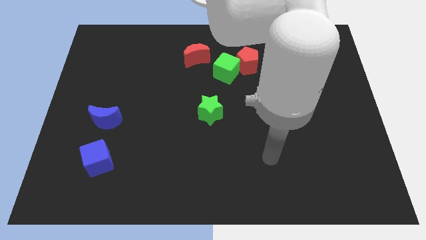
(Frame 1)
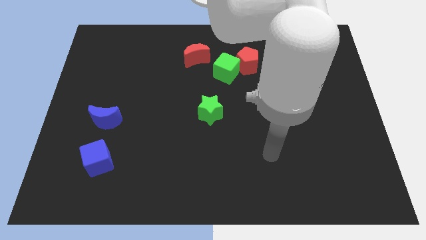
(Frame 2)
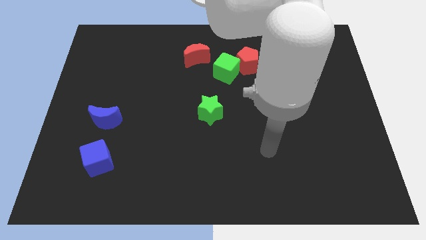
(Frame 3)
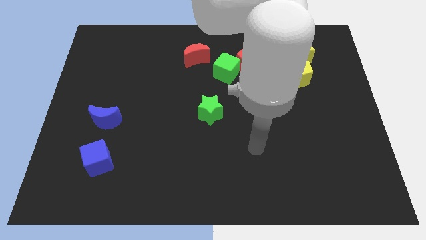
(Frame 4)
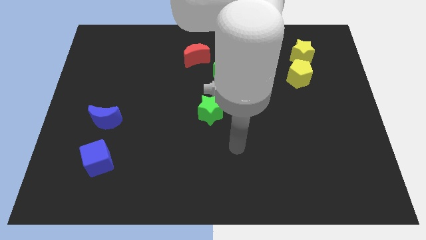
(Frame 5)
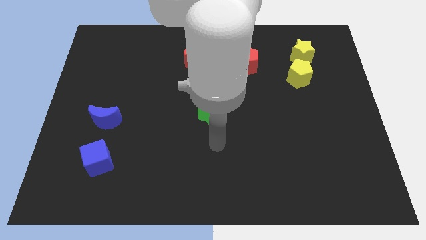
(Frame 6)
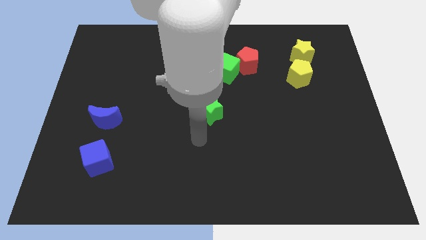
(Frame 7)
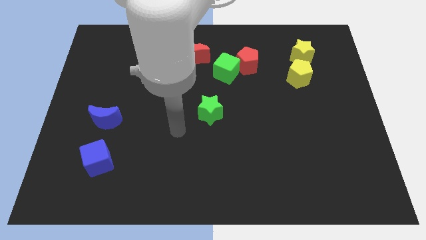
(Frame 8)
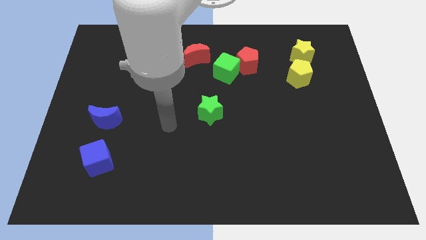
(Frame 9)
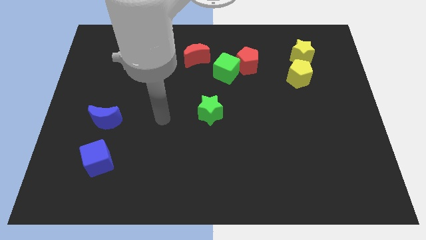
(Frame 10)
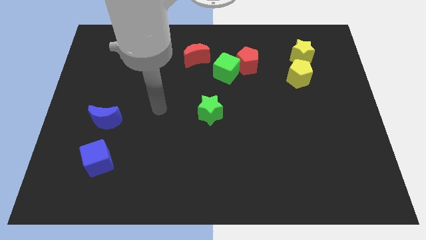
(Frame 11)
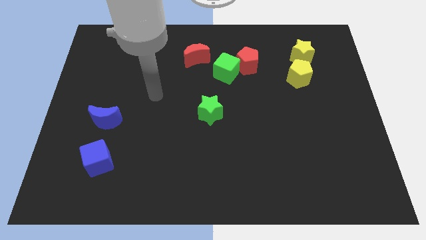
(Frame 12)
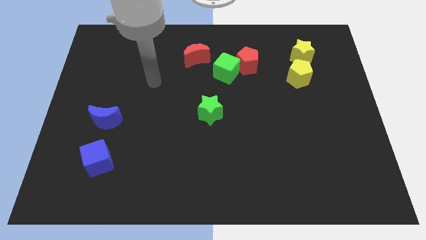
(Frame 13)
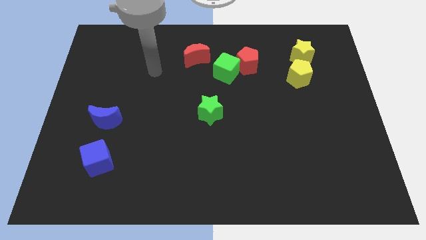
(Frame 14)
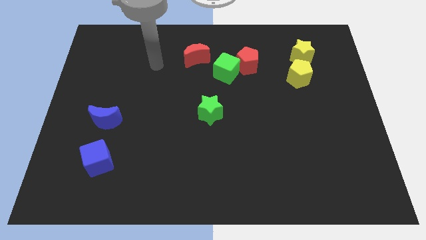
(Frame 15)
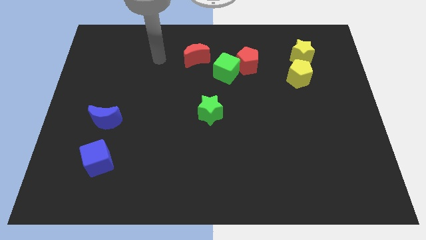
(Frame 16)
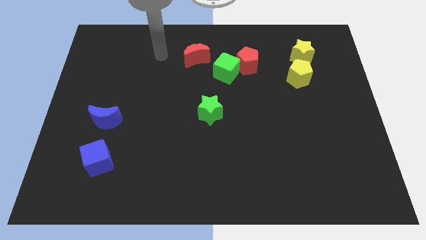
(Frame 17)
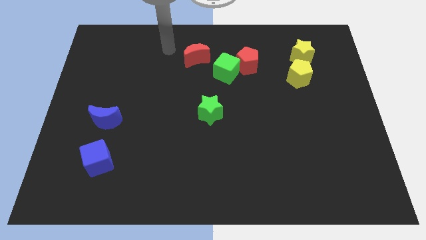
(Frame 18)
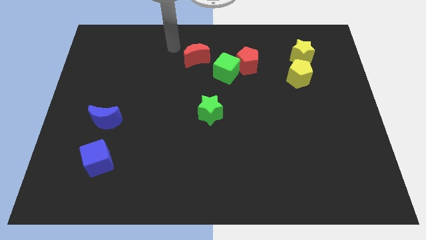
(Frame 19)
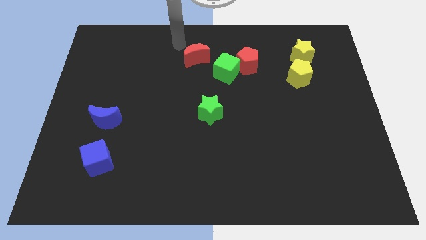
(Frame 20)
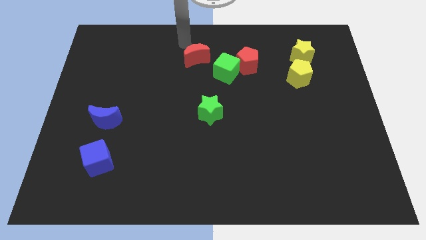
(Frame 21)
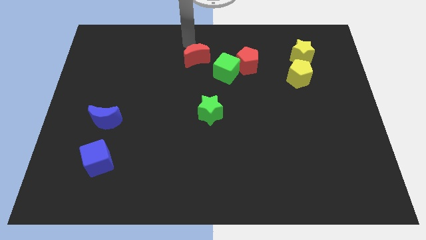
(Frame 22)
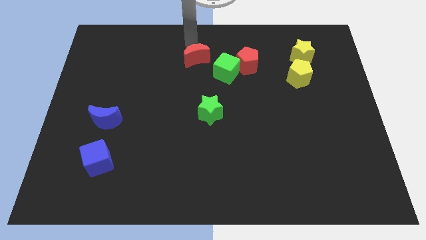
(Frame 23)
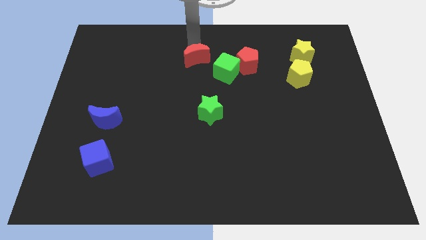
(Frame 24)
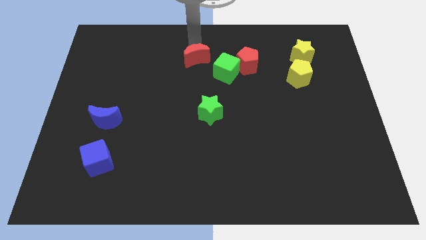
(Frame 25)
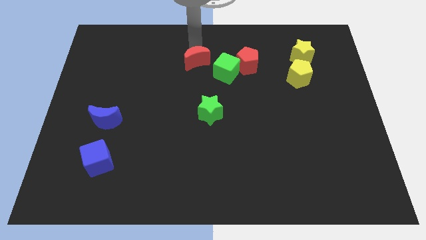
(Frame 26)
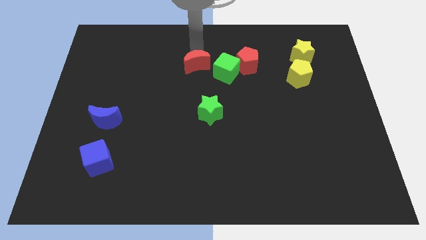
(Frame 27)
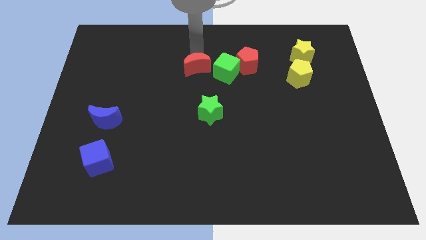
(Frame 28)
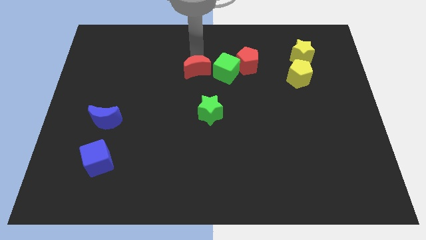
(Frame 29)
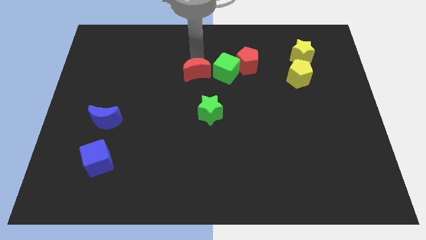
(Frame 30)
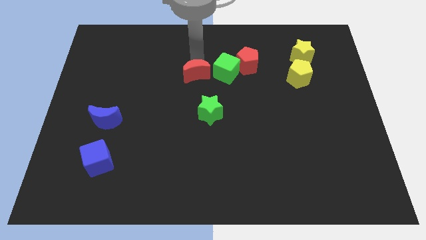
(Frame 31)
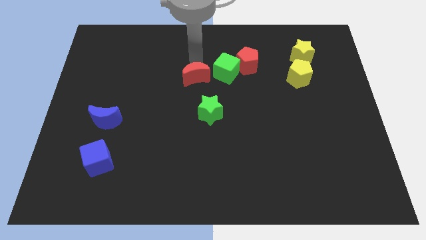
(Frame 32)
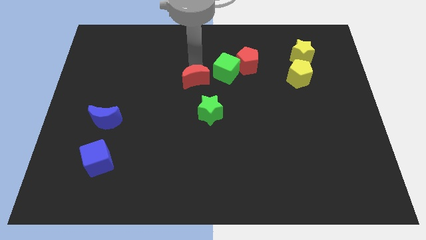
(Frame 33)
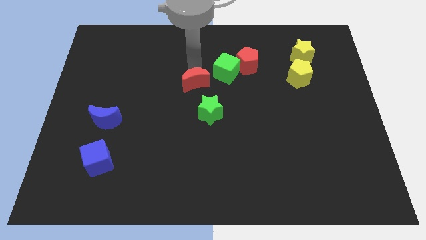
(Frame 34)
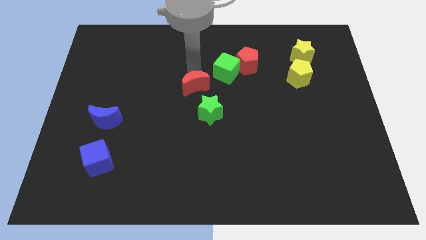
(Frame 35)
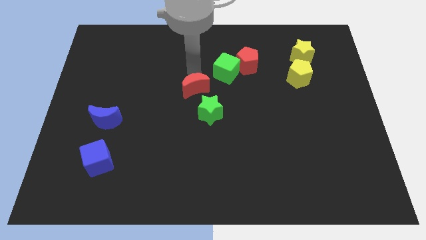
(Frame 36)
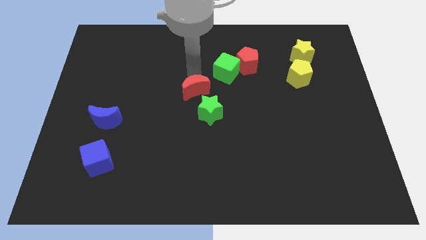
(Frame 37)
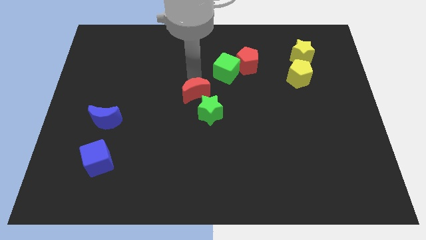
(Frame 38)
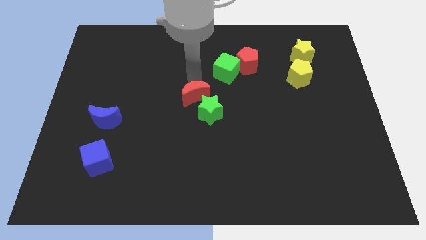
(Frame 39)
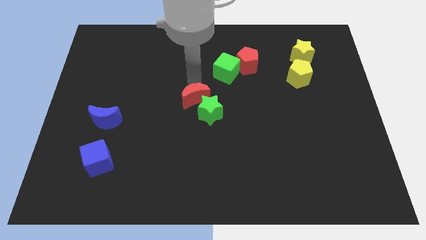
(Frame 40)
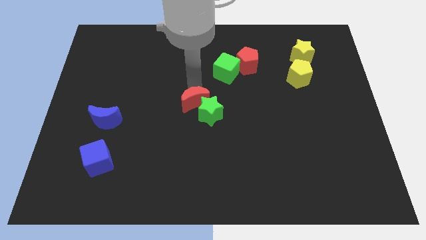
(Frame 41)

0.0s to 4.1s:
move the red moon to the green star

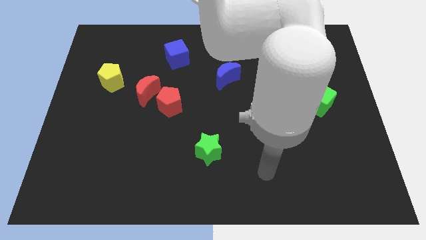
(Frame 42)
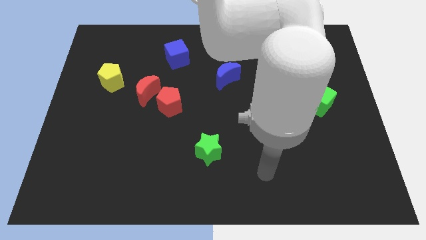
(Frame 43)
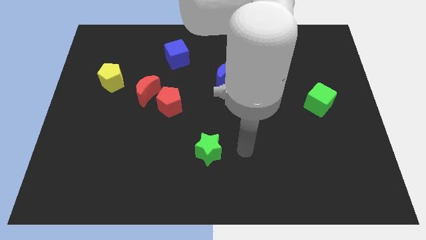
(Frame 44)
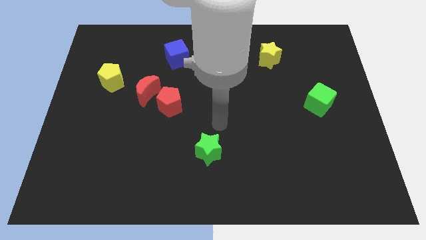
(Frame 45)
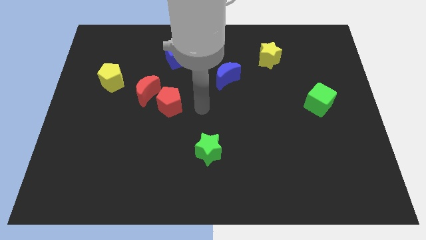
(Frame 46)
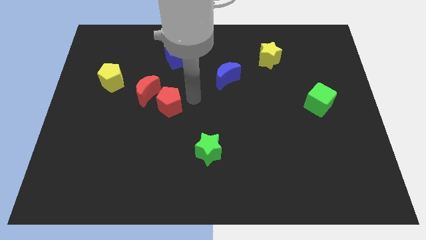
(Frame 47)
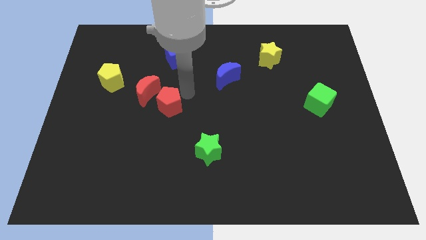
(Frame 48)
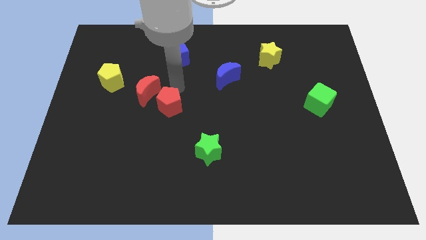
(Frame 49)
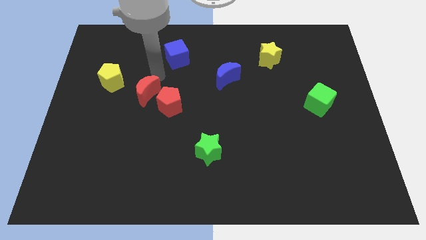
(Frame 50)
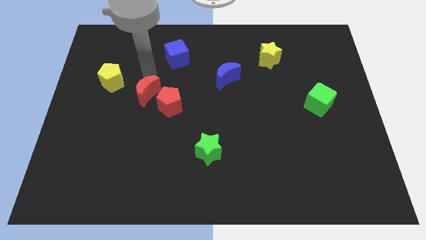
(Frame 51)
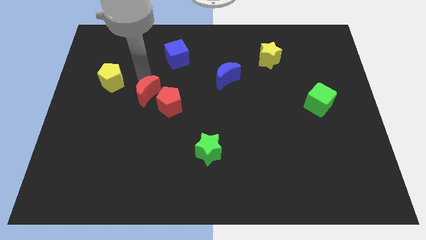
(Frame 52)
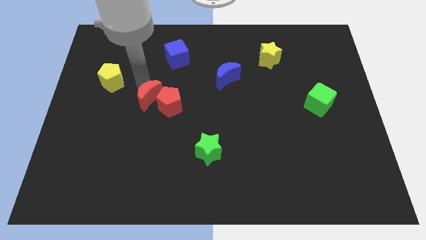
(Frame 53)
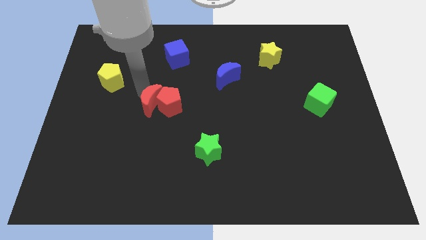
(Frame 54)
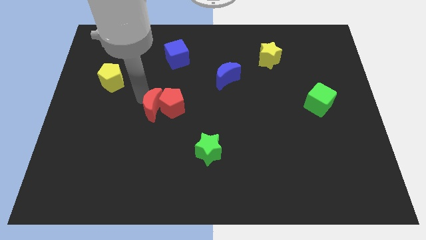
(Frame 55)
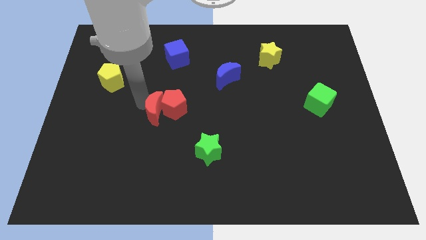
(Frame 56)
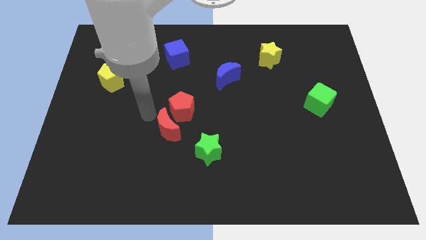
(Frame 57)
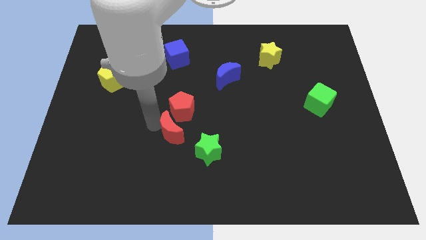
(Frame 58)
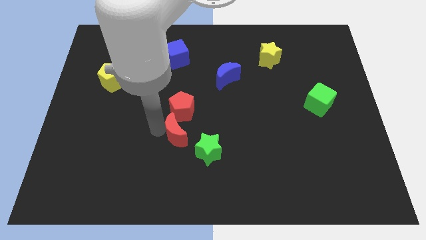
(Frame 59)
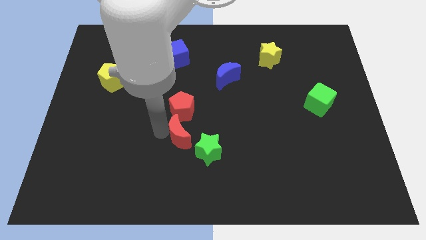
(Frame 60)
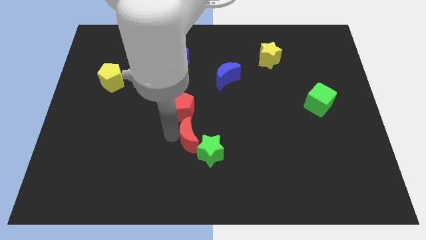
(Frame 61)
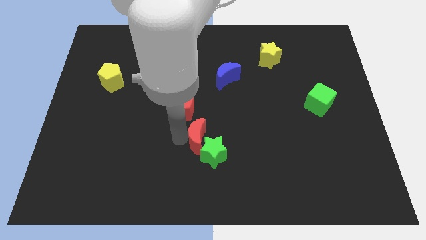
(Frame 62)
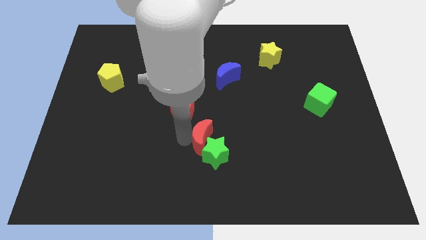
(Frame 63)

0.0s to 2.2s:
slide the red moon next to the green star

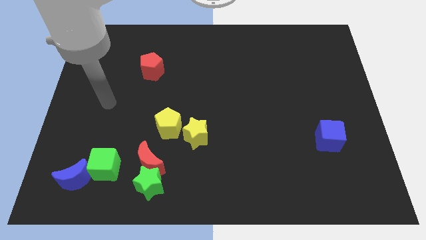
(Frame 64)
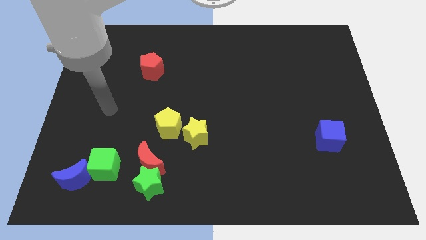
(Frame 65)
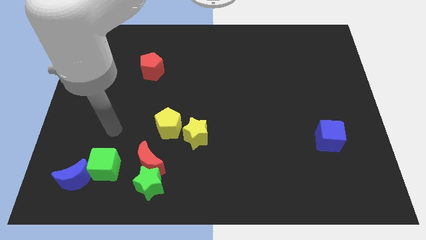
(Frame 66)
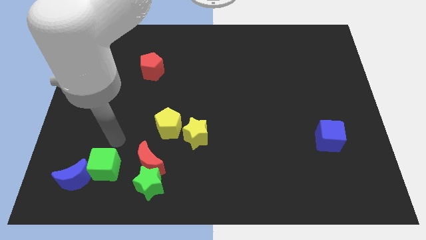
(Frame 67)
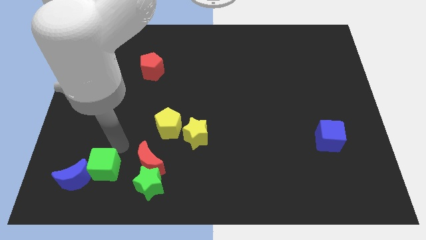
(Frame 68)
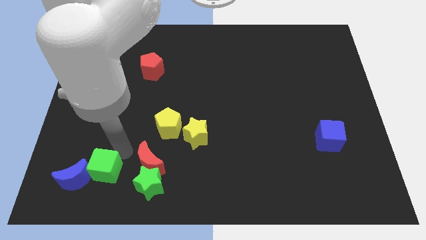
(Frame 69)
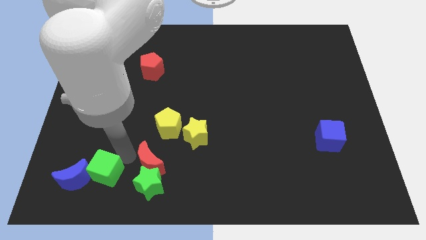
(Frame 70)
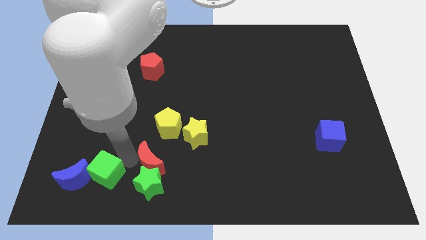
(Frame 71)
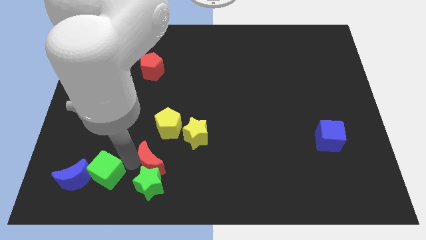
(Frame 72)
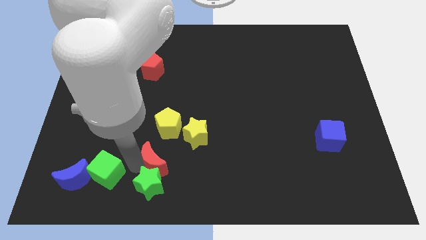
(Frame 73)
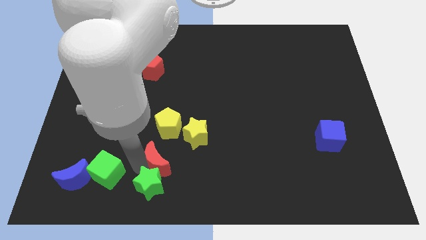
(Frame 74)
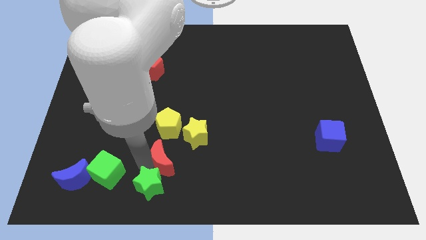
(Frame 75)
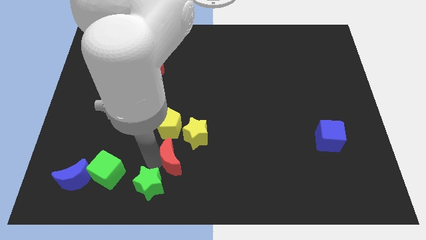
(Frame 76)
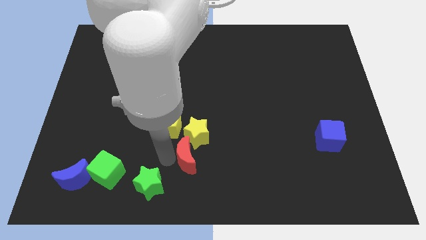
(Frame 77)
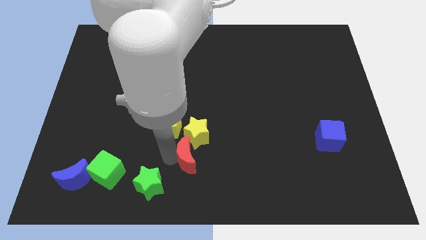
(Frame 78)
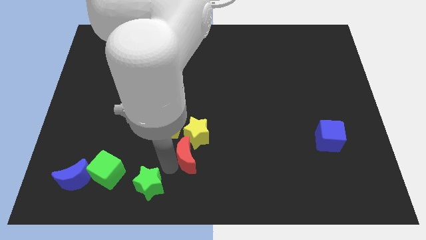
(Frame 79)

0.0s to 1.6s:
push the red moon next to the yellow star

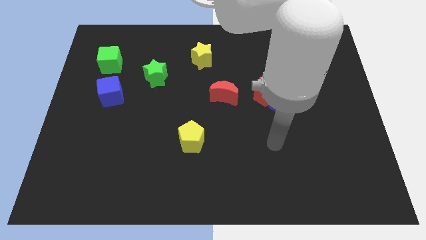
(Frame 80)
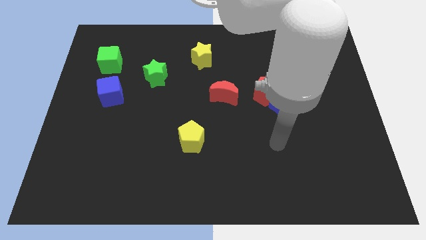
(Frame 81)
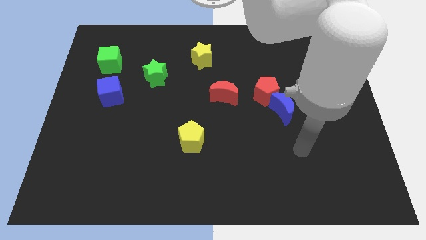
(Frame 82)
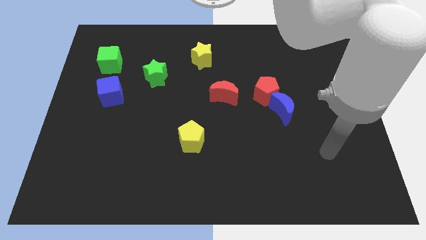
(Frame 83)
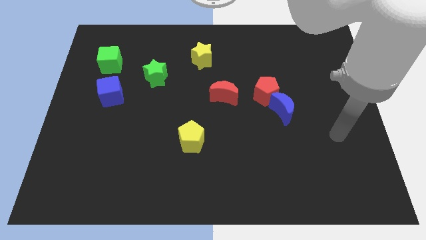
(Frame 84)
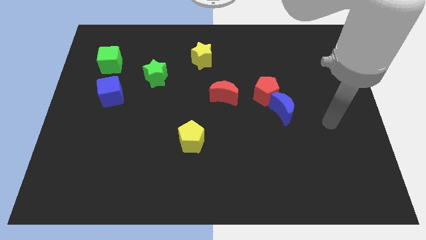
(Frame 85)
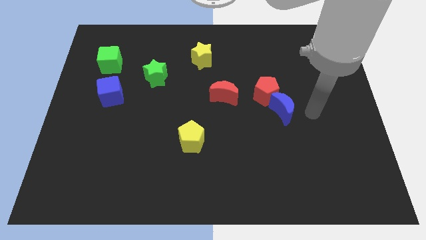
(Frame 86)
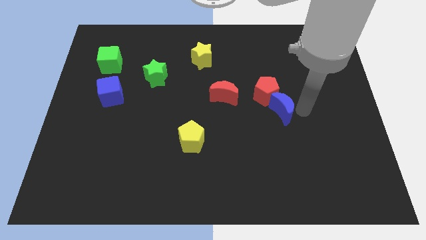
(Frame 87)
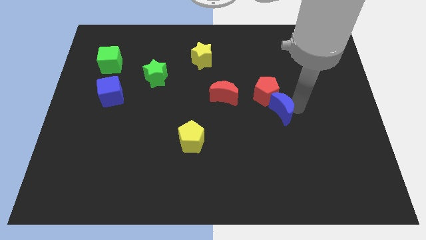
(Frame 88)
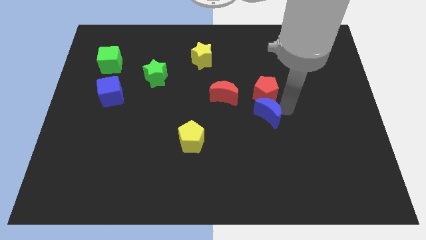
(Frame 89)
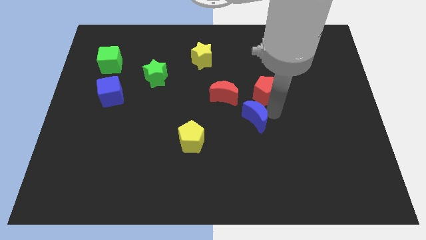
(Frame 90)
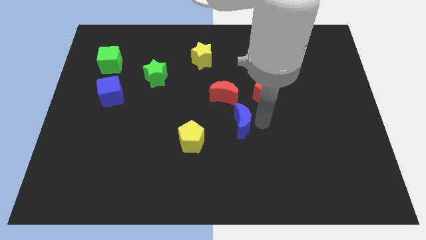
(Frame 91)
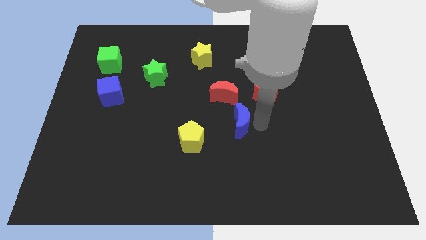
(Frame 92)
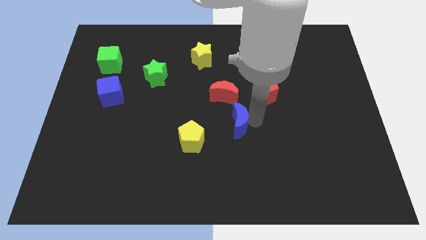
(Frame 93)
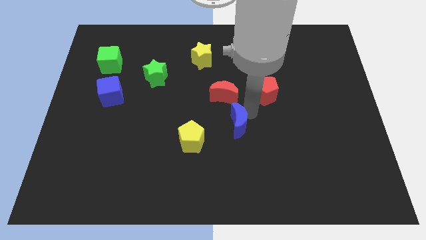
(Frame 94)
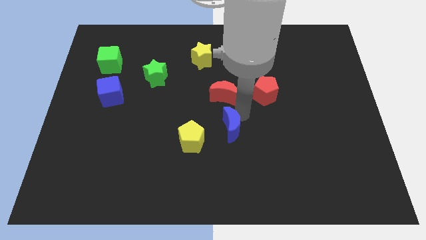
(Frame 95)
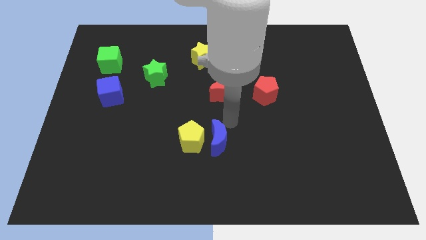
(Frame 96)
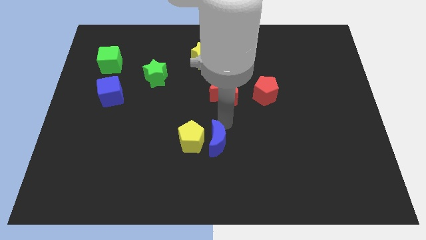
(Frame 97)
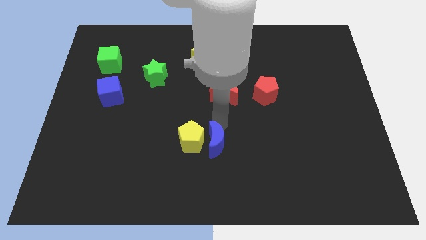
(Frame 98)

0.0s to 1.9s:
push the blue moon to the yellow pentagon
